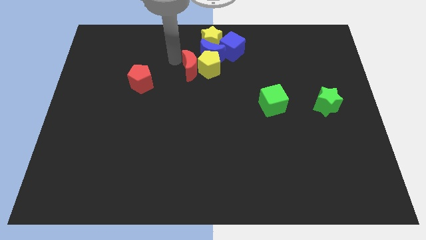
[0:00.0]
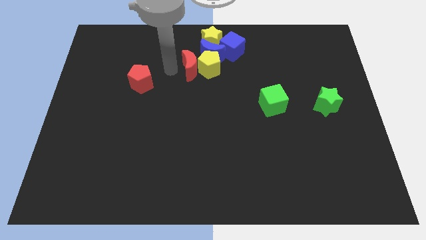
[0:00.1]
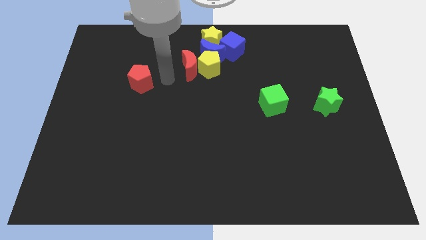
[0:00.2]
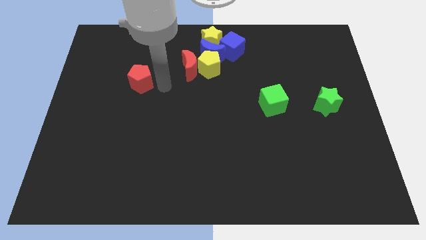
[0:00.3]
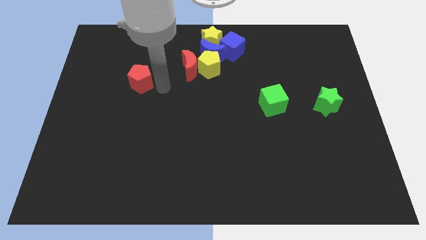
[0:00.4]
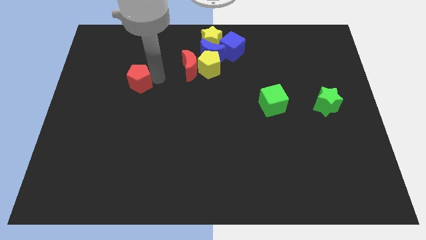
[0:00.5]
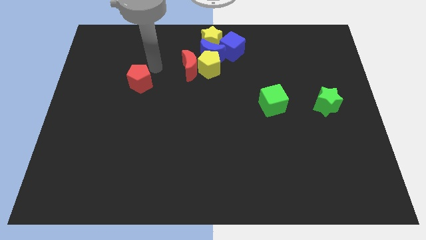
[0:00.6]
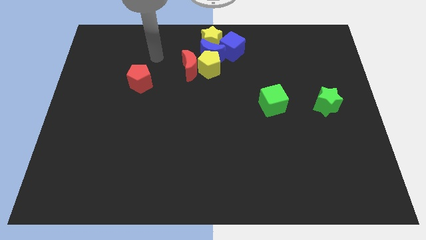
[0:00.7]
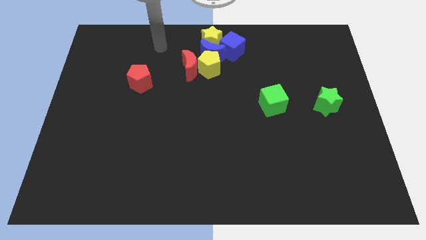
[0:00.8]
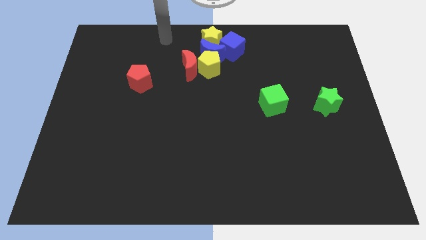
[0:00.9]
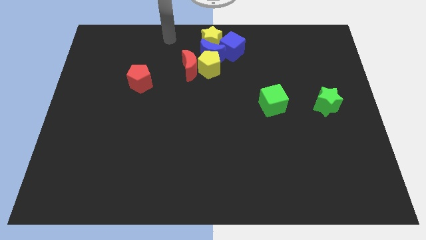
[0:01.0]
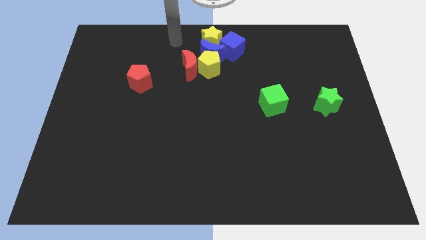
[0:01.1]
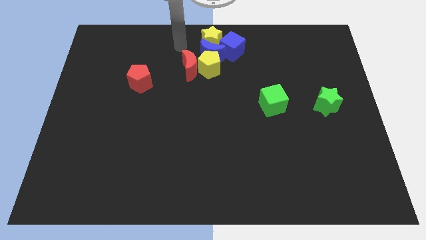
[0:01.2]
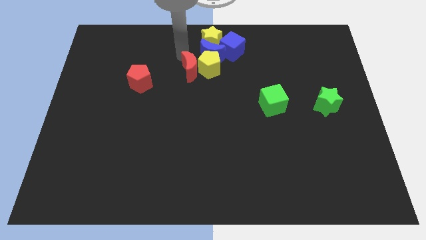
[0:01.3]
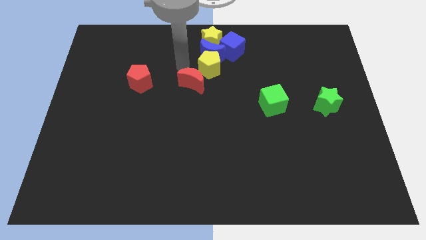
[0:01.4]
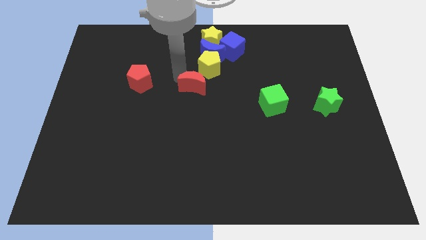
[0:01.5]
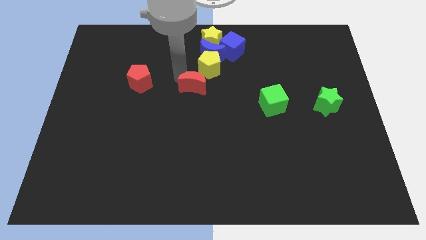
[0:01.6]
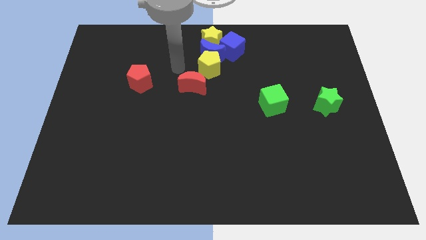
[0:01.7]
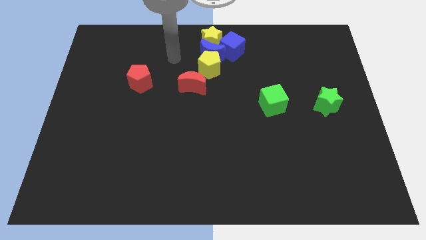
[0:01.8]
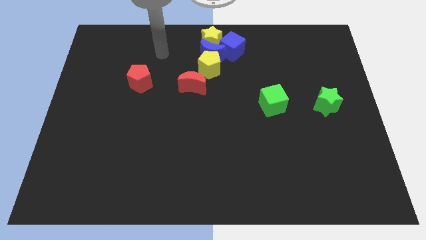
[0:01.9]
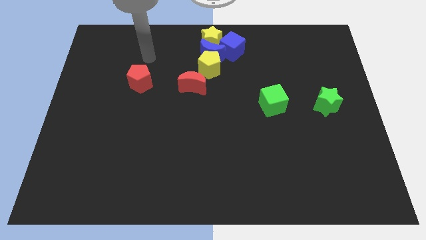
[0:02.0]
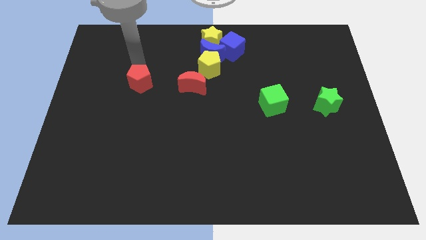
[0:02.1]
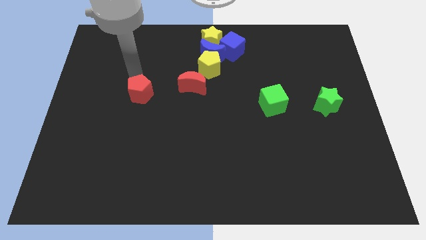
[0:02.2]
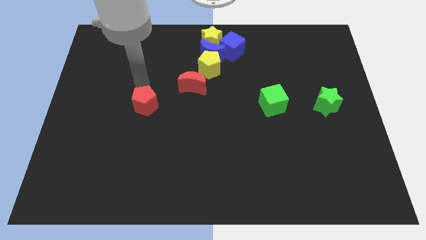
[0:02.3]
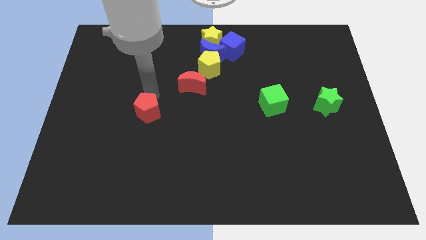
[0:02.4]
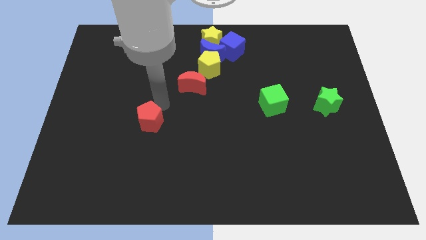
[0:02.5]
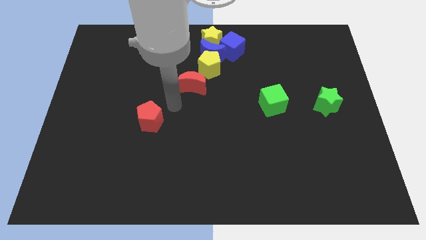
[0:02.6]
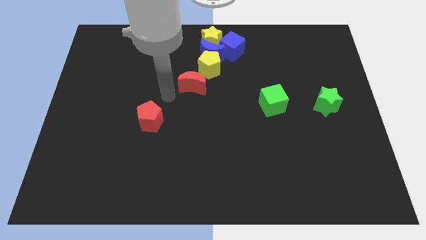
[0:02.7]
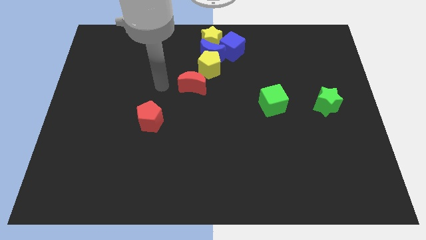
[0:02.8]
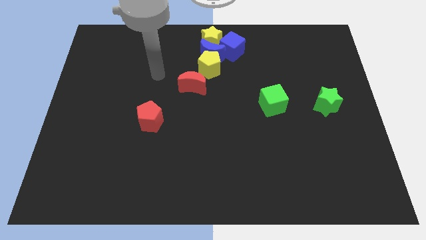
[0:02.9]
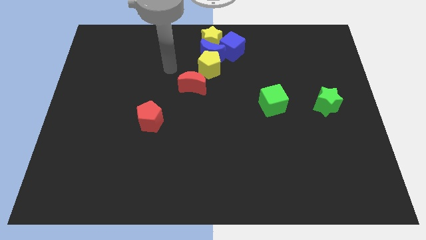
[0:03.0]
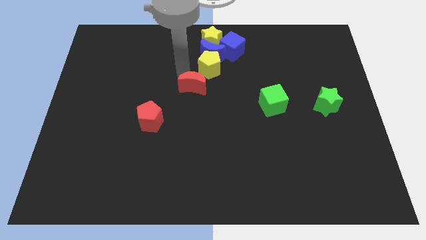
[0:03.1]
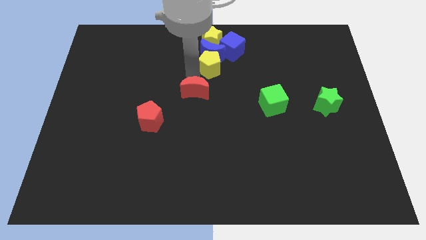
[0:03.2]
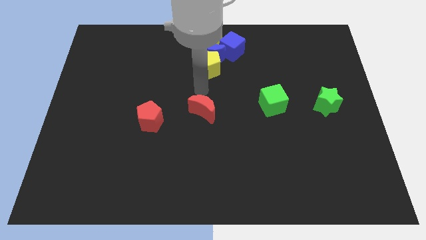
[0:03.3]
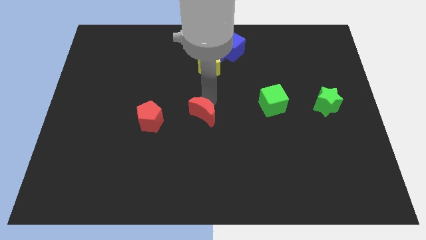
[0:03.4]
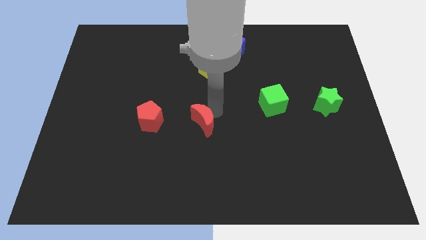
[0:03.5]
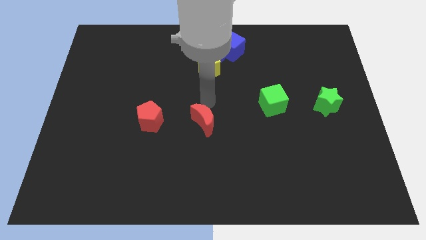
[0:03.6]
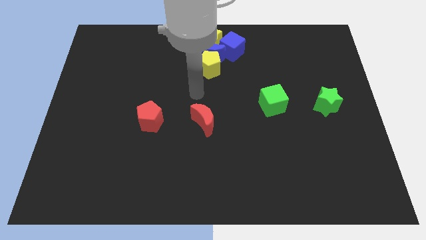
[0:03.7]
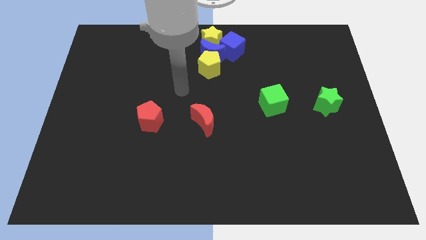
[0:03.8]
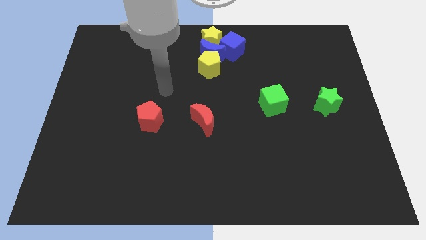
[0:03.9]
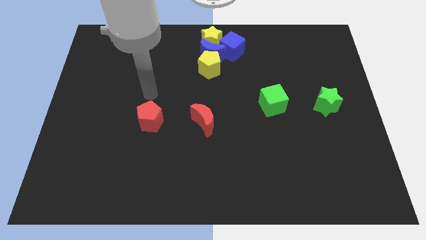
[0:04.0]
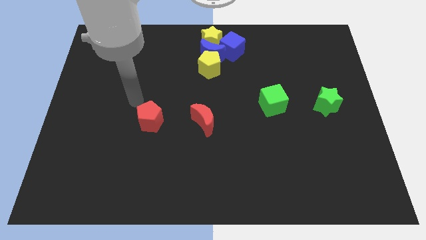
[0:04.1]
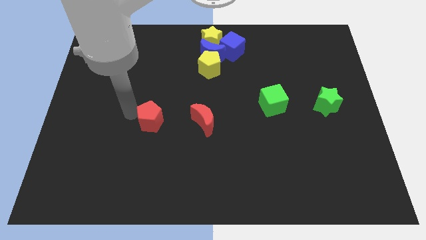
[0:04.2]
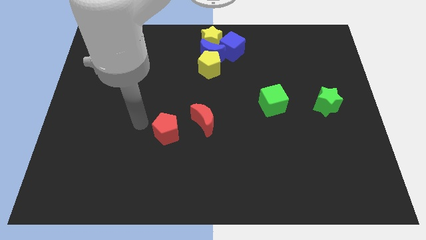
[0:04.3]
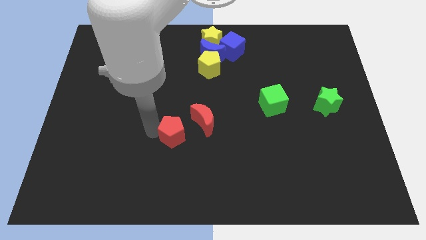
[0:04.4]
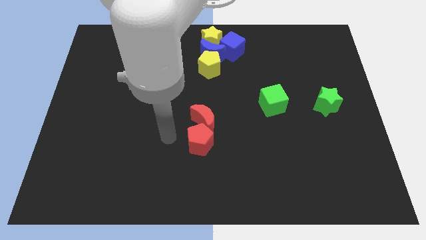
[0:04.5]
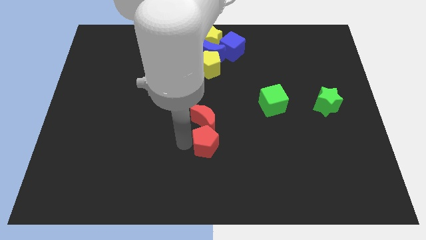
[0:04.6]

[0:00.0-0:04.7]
move the red blocks vertically below the bottom side of the yellow pentagon

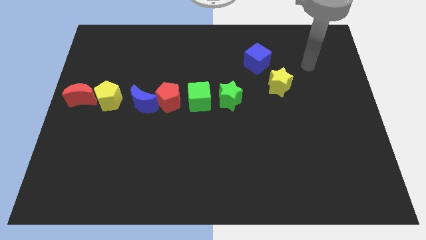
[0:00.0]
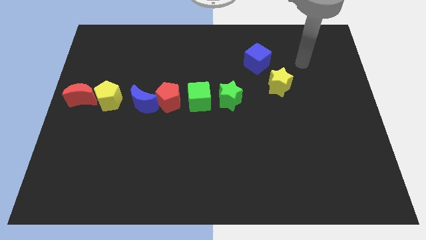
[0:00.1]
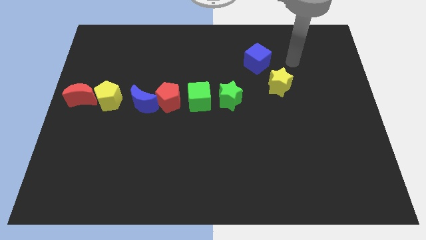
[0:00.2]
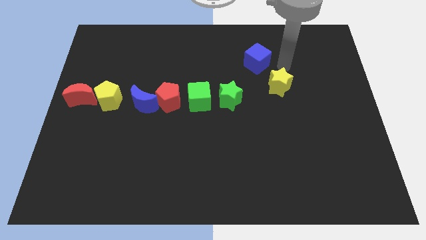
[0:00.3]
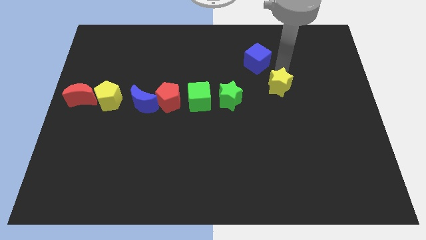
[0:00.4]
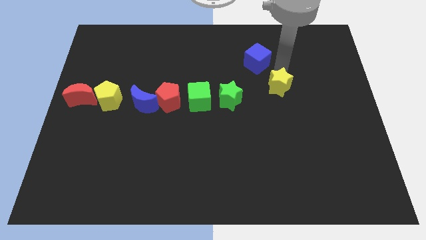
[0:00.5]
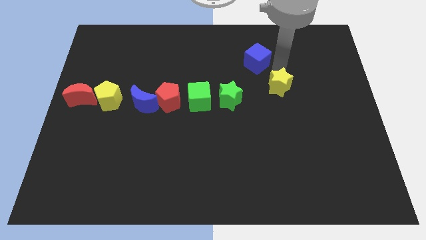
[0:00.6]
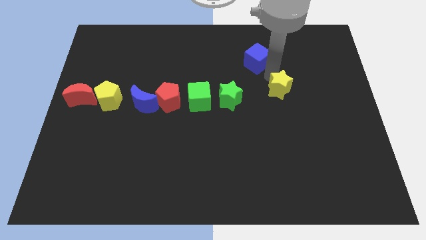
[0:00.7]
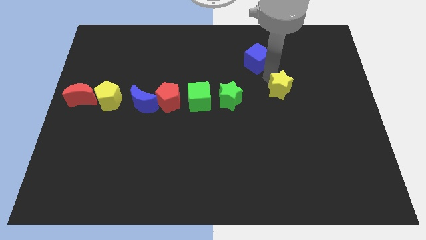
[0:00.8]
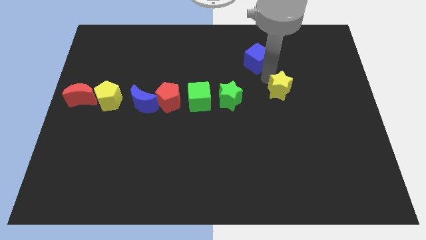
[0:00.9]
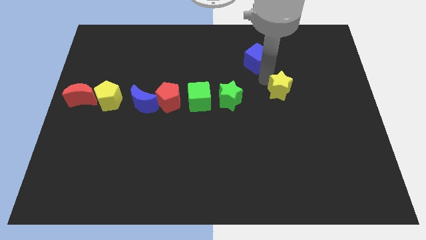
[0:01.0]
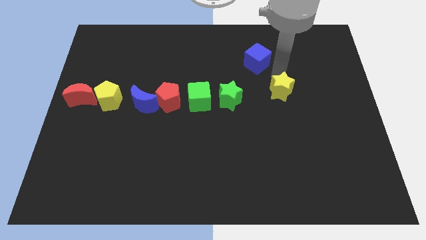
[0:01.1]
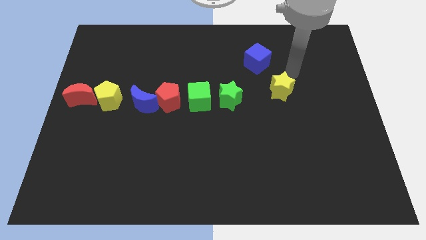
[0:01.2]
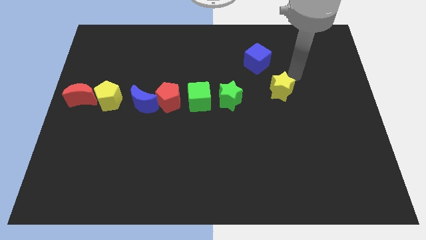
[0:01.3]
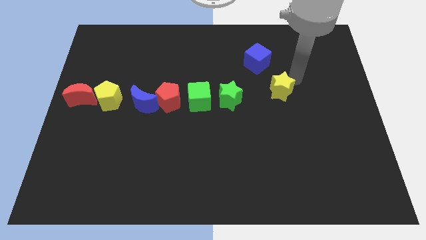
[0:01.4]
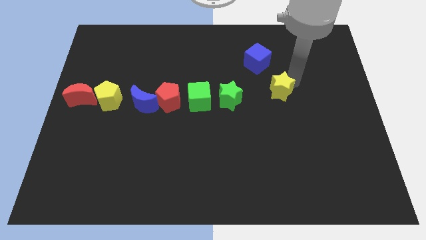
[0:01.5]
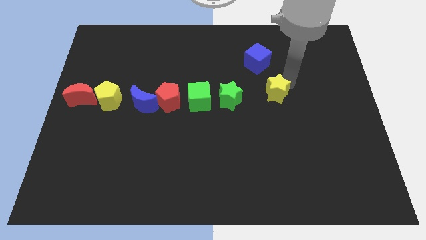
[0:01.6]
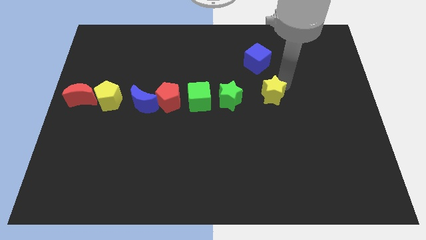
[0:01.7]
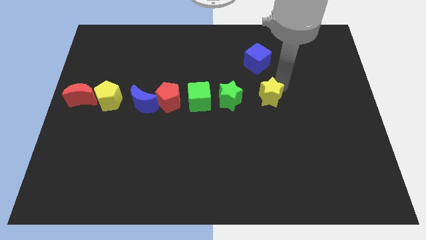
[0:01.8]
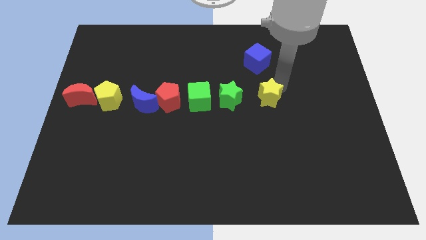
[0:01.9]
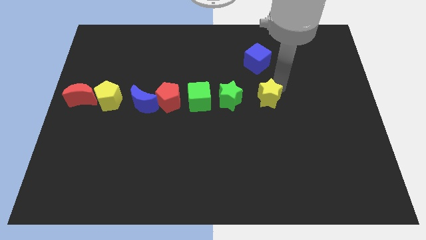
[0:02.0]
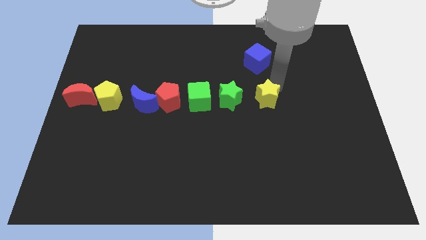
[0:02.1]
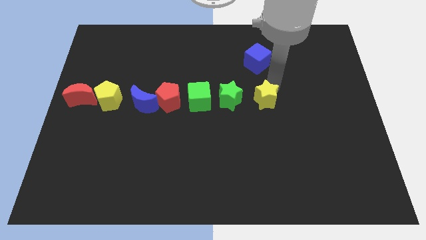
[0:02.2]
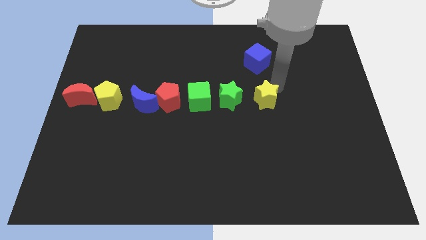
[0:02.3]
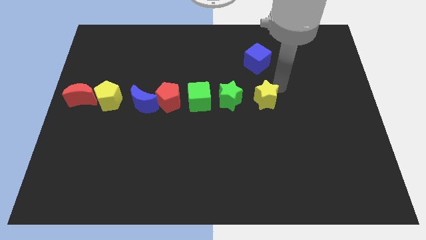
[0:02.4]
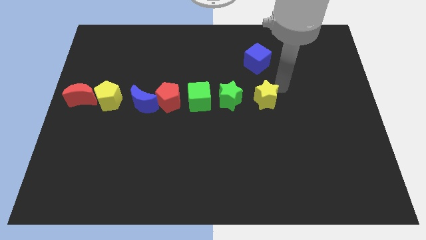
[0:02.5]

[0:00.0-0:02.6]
move the yellow star to the right side of the green star

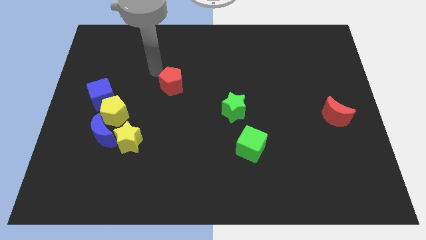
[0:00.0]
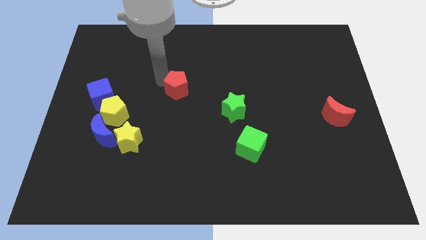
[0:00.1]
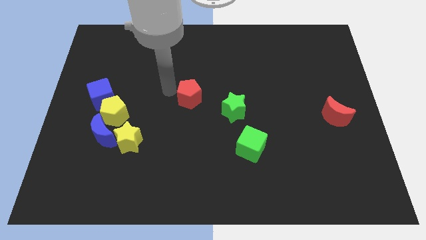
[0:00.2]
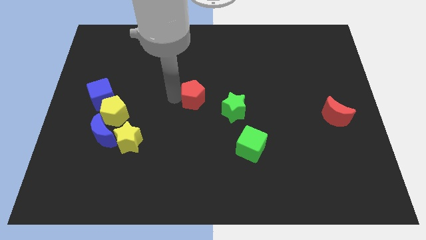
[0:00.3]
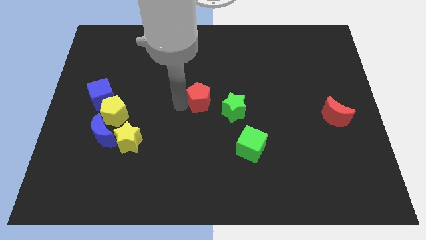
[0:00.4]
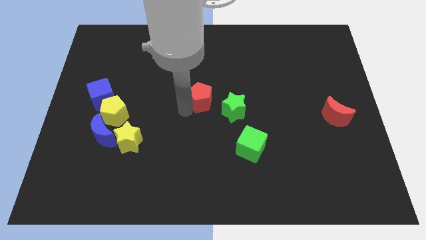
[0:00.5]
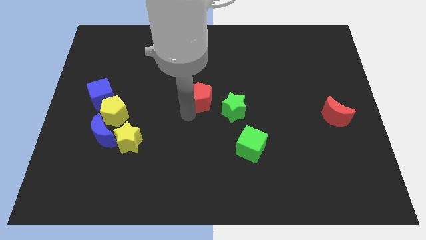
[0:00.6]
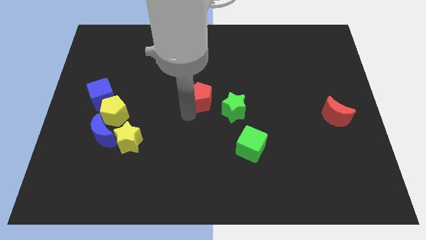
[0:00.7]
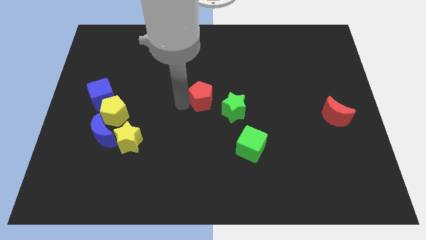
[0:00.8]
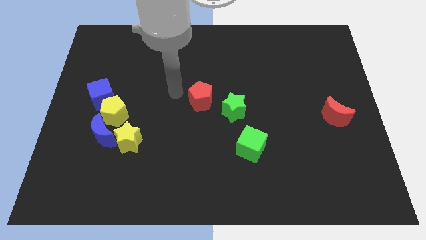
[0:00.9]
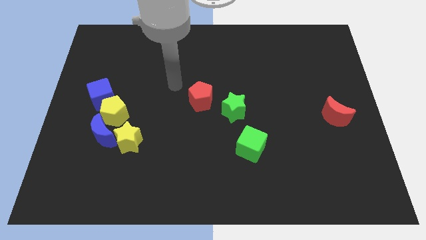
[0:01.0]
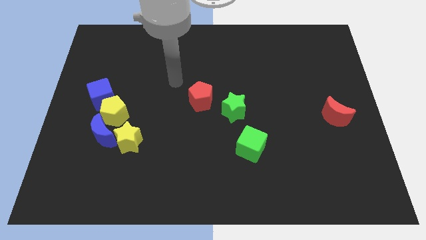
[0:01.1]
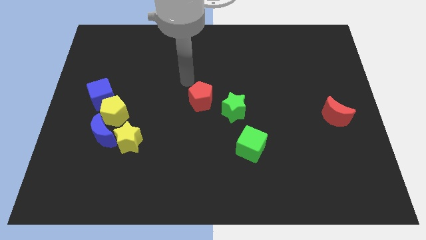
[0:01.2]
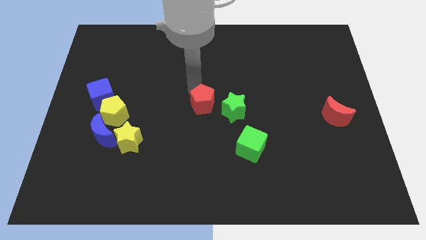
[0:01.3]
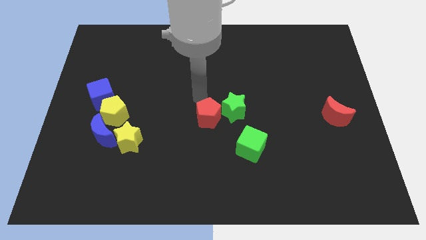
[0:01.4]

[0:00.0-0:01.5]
push the red pentagon to the top left of the green star

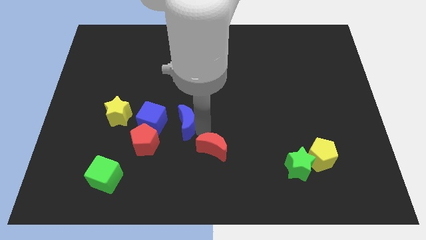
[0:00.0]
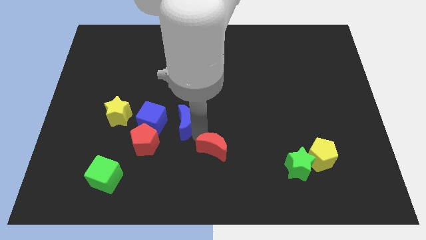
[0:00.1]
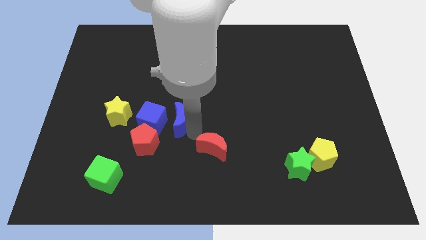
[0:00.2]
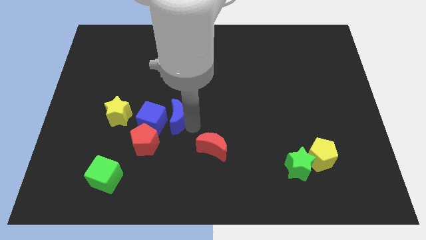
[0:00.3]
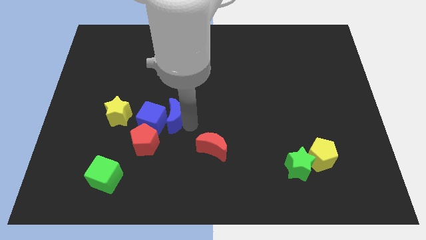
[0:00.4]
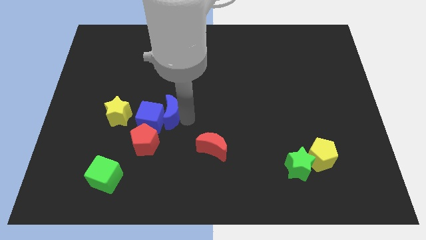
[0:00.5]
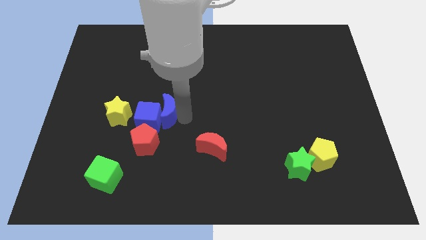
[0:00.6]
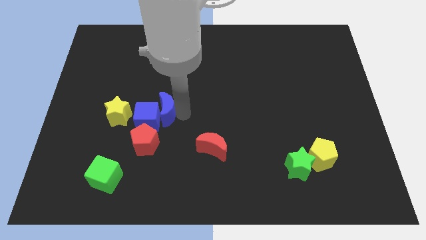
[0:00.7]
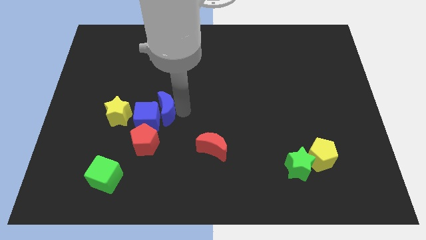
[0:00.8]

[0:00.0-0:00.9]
move the blue moon close to the blue cube
